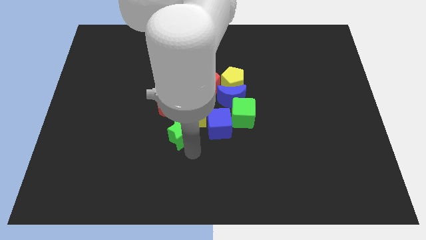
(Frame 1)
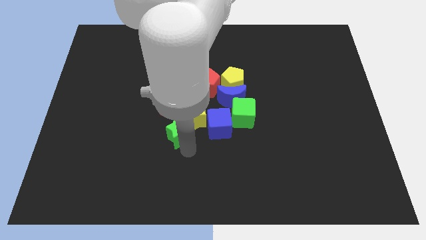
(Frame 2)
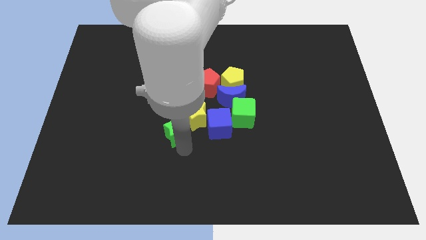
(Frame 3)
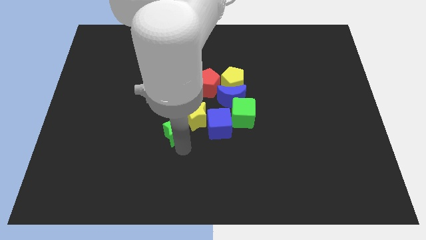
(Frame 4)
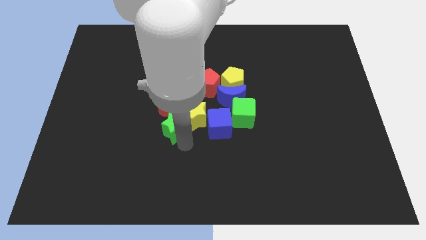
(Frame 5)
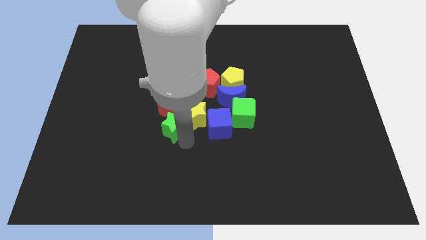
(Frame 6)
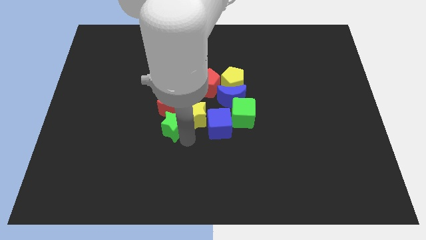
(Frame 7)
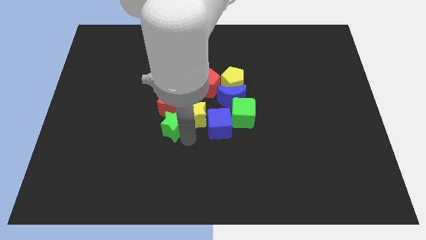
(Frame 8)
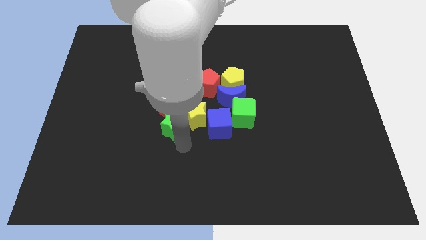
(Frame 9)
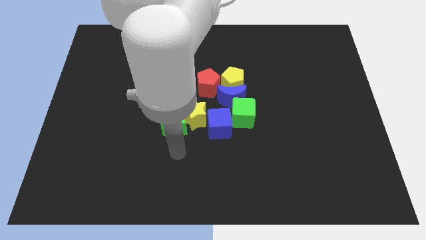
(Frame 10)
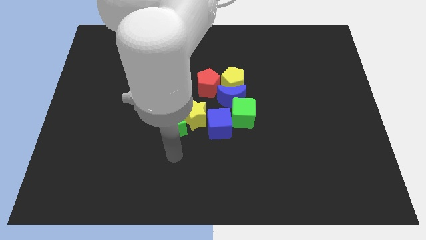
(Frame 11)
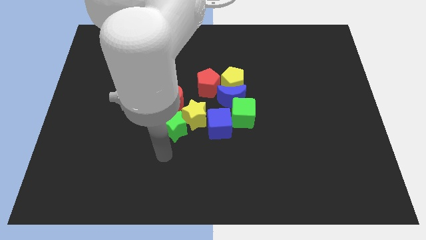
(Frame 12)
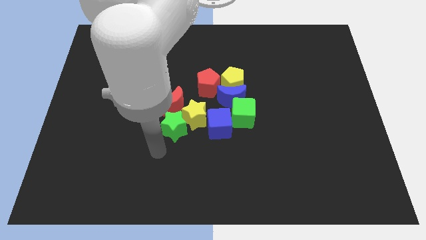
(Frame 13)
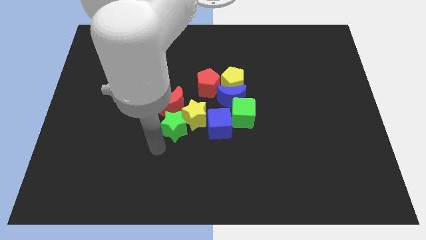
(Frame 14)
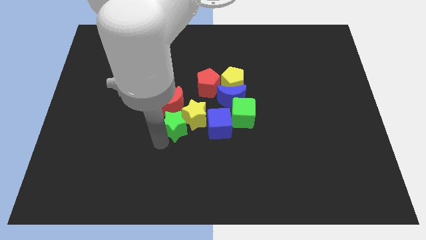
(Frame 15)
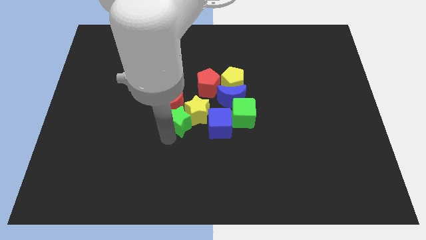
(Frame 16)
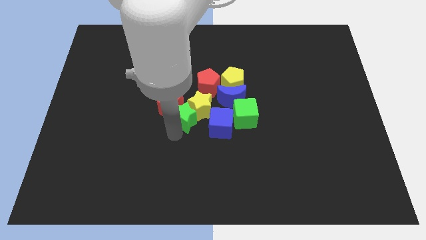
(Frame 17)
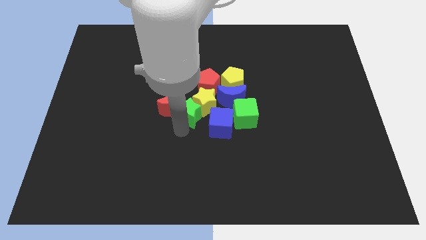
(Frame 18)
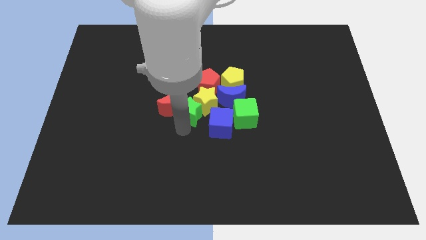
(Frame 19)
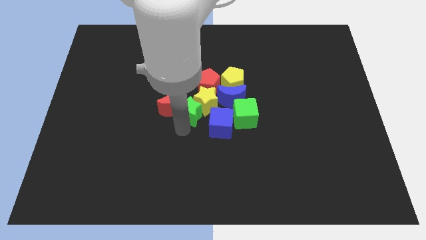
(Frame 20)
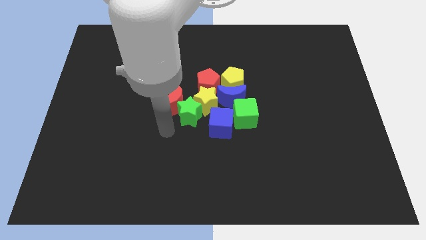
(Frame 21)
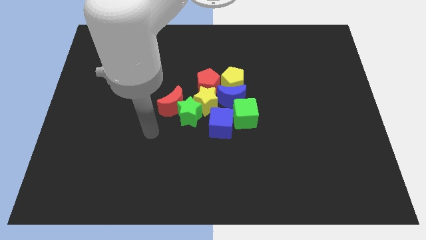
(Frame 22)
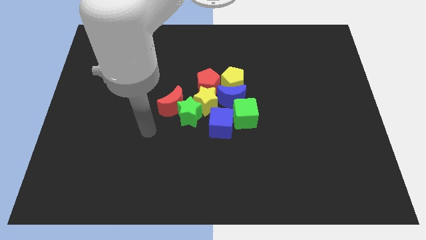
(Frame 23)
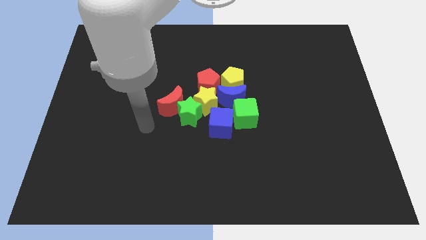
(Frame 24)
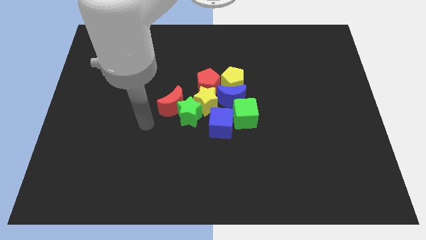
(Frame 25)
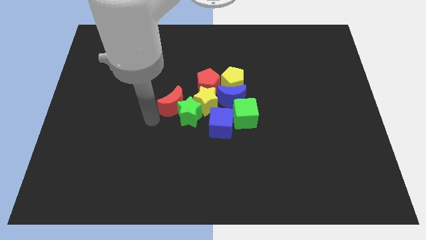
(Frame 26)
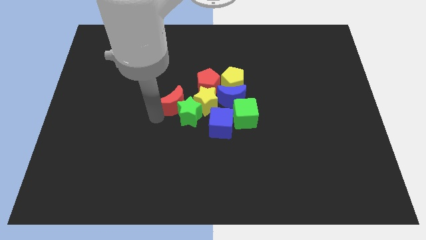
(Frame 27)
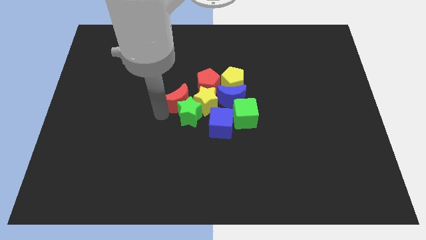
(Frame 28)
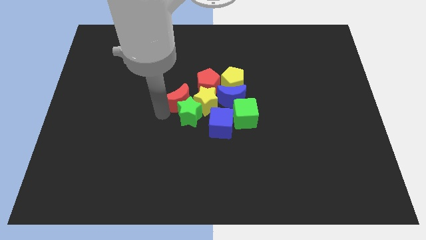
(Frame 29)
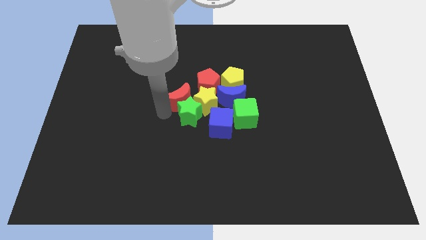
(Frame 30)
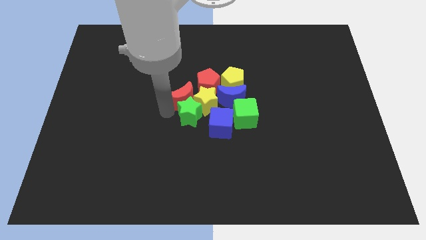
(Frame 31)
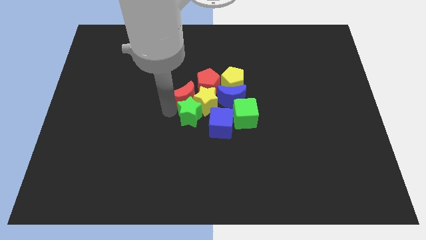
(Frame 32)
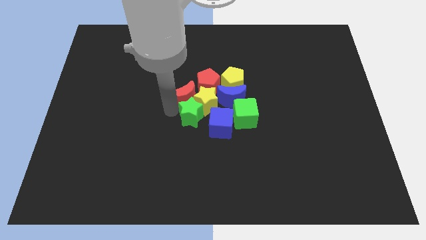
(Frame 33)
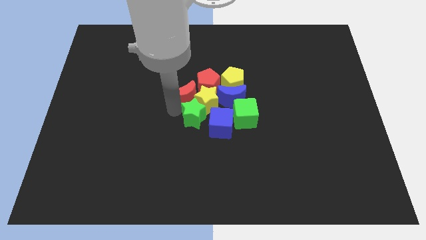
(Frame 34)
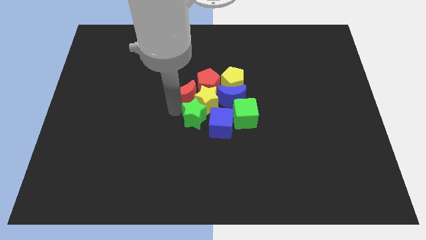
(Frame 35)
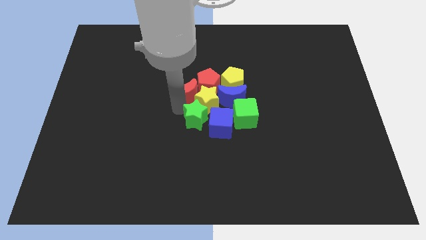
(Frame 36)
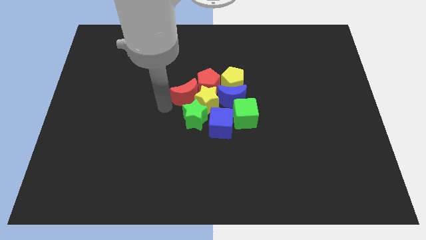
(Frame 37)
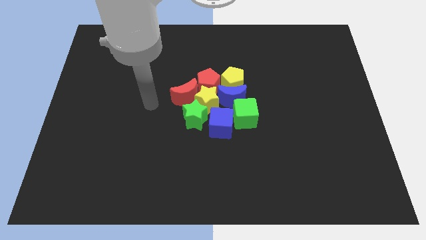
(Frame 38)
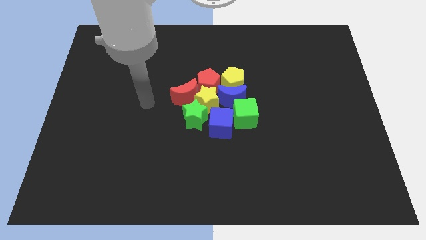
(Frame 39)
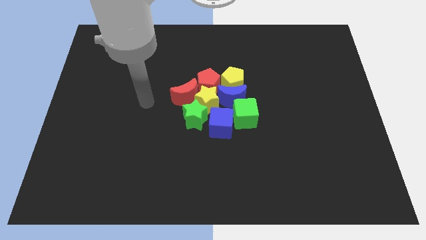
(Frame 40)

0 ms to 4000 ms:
move the green star yellow star and red moon into the bottom side of the red pentagon

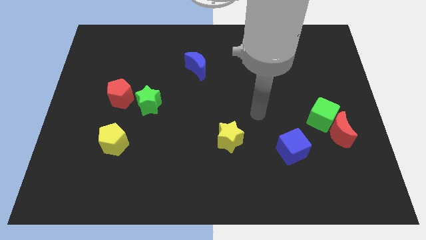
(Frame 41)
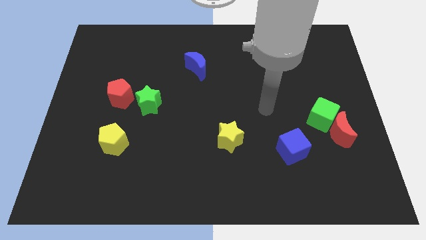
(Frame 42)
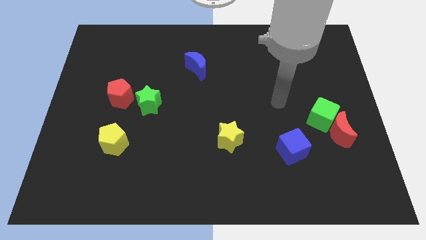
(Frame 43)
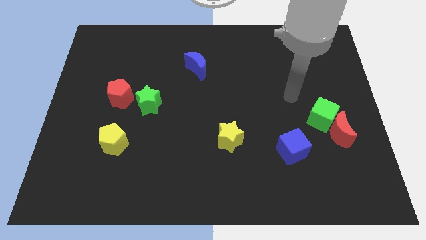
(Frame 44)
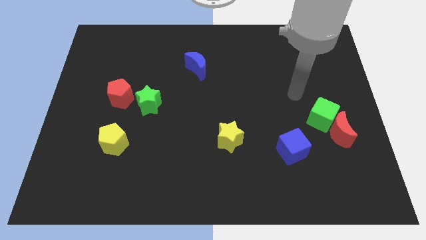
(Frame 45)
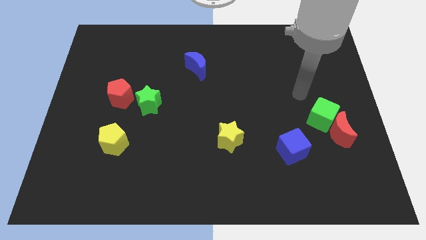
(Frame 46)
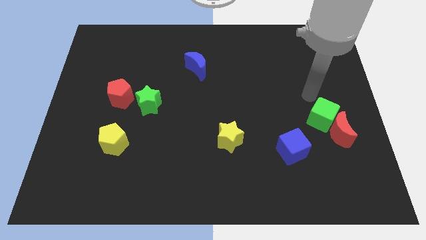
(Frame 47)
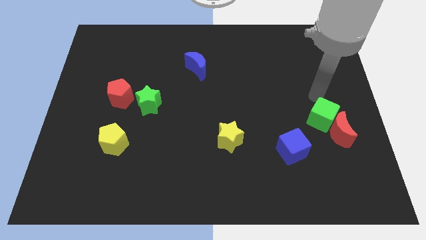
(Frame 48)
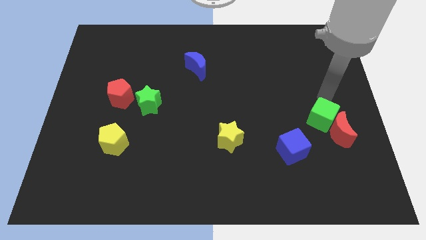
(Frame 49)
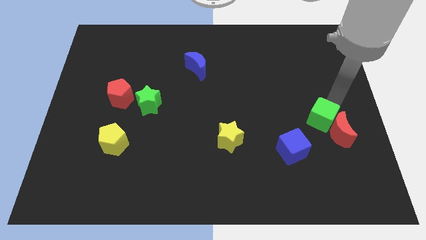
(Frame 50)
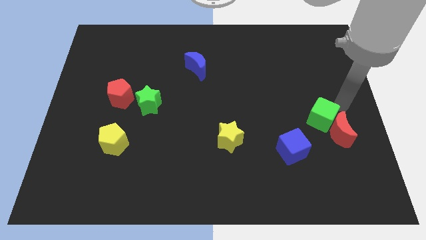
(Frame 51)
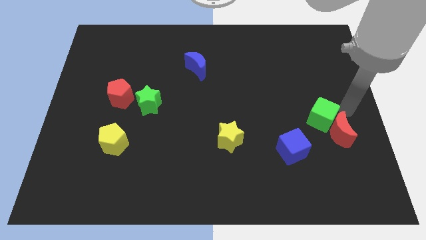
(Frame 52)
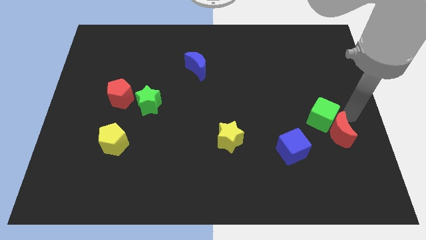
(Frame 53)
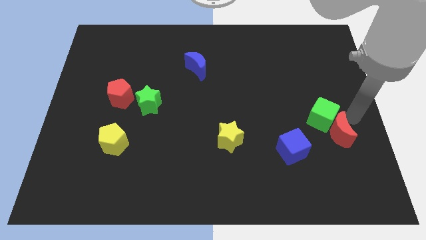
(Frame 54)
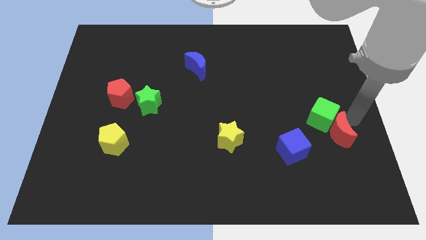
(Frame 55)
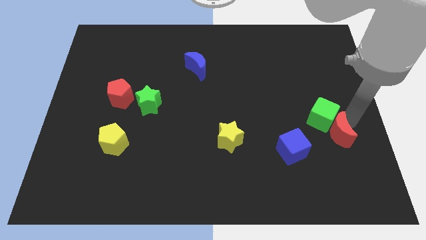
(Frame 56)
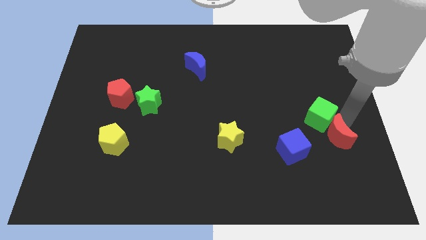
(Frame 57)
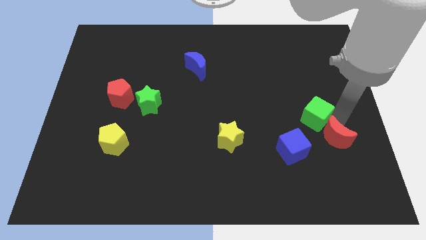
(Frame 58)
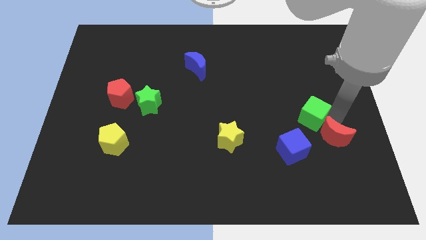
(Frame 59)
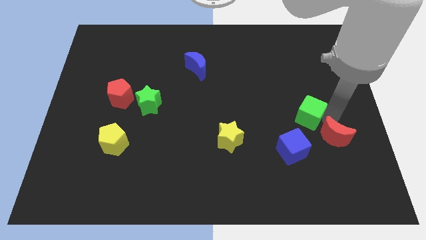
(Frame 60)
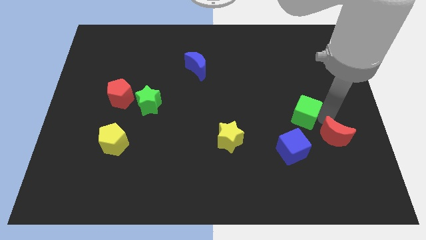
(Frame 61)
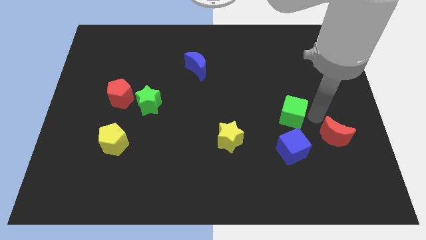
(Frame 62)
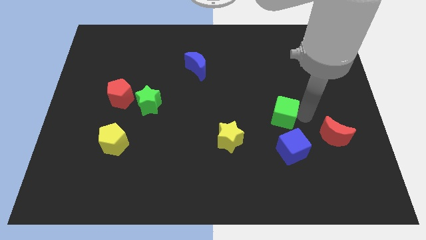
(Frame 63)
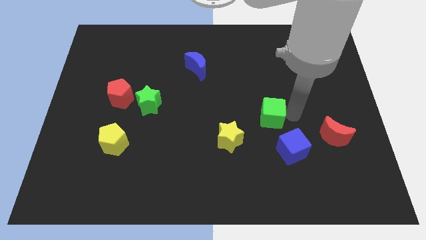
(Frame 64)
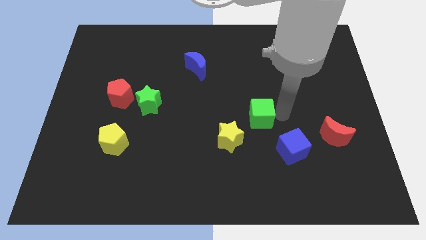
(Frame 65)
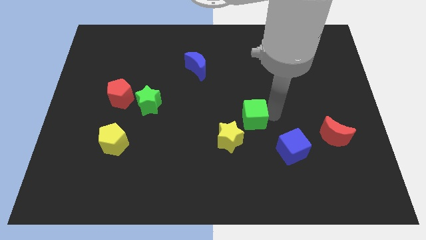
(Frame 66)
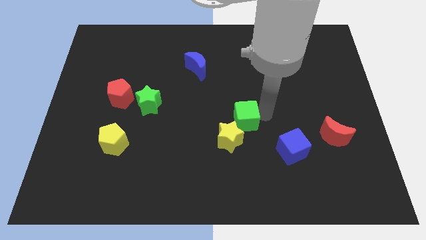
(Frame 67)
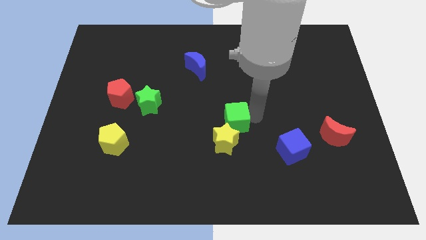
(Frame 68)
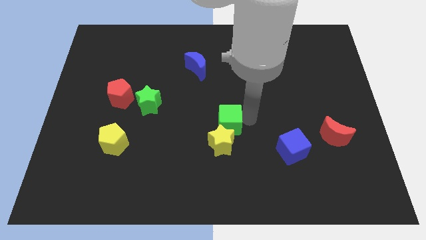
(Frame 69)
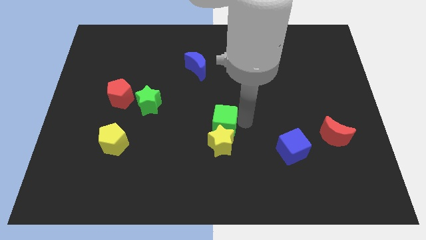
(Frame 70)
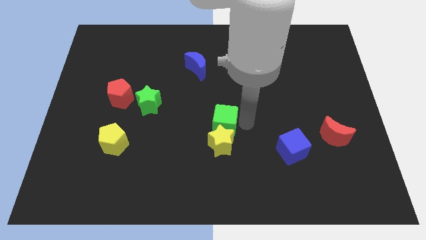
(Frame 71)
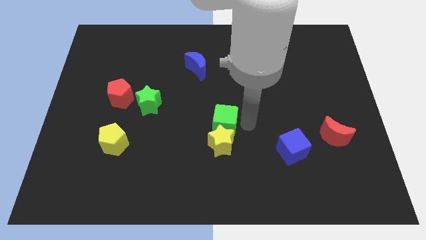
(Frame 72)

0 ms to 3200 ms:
move green cube into the yellow star

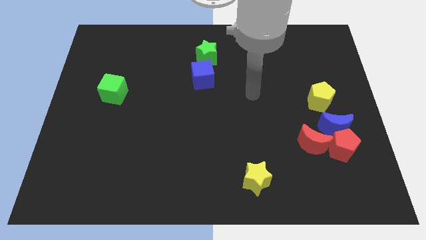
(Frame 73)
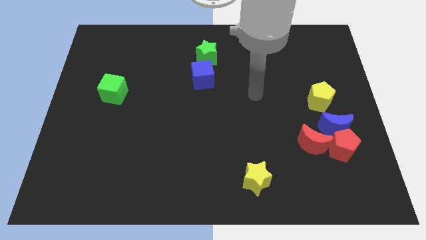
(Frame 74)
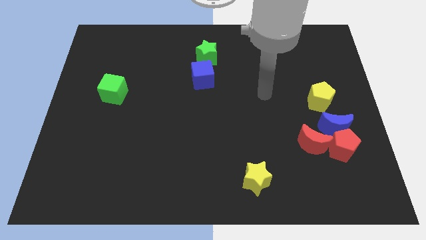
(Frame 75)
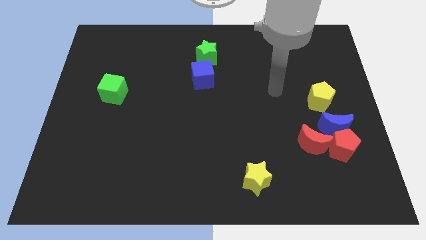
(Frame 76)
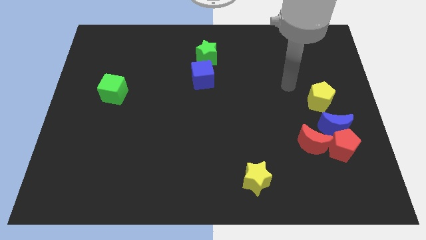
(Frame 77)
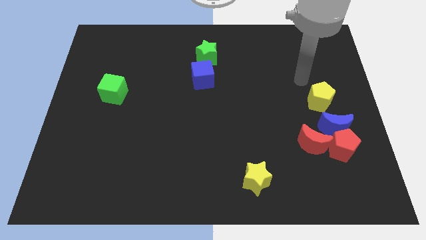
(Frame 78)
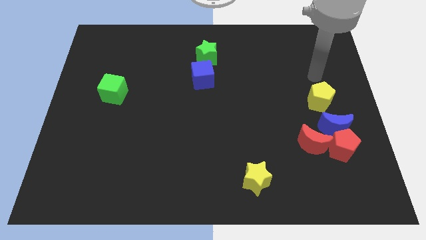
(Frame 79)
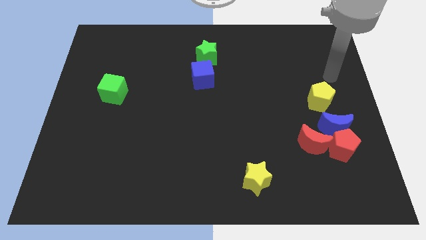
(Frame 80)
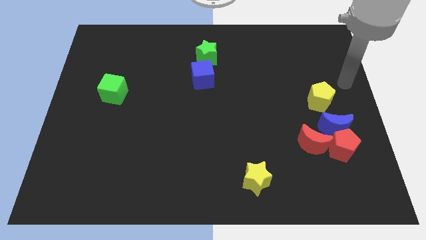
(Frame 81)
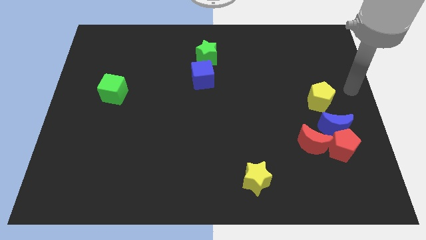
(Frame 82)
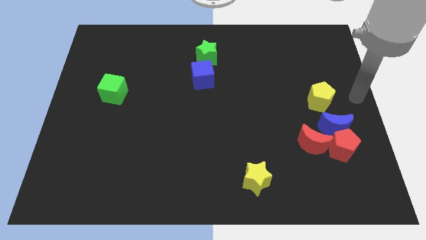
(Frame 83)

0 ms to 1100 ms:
move your hand to the right side of the yellow pentagon

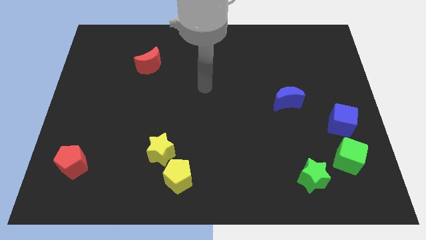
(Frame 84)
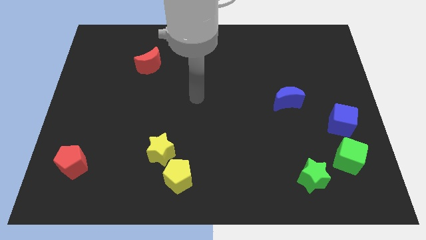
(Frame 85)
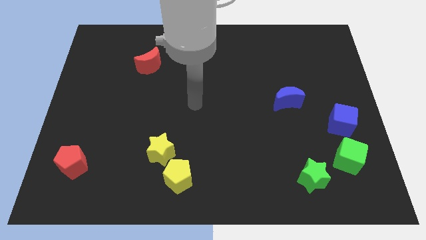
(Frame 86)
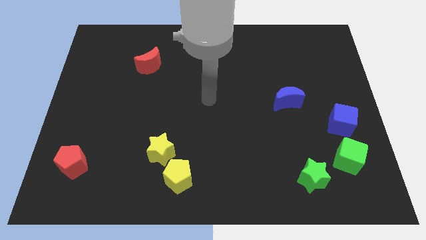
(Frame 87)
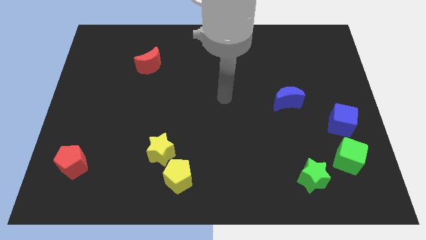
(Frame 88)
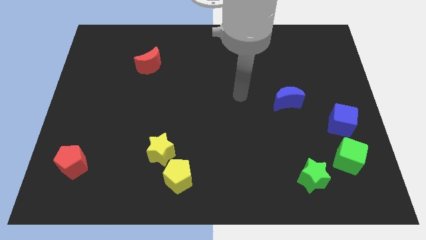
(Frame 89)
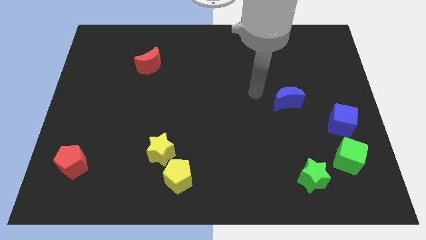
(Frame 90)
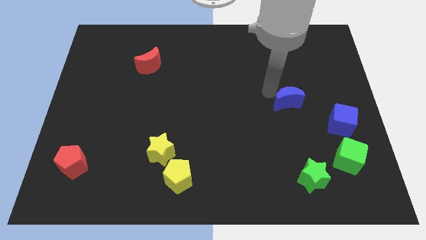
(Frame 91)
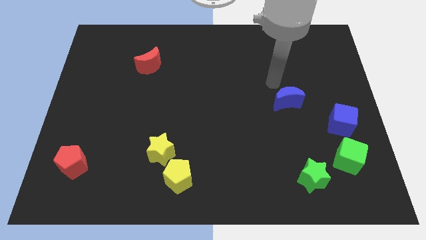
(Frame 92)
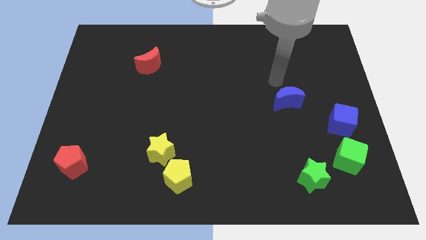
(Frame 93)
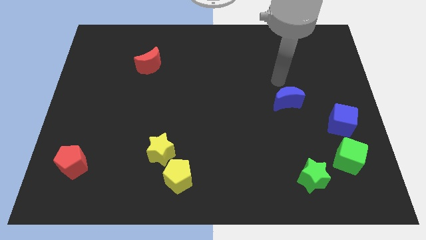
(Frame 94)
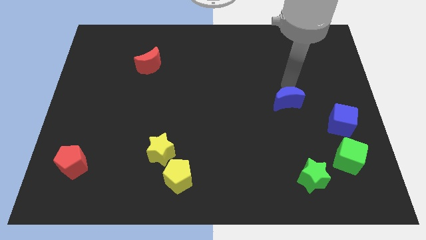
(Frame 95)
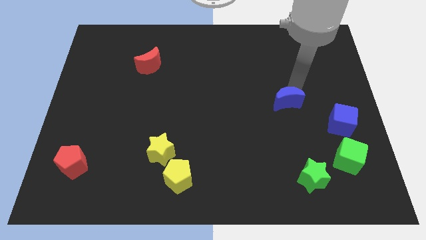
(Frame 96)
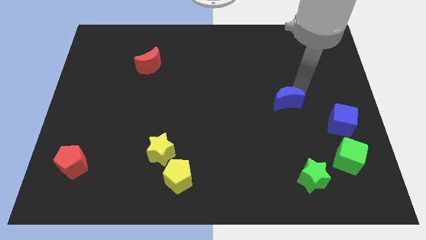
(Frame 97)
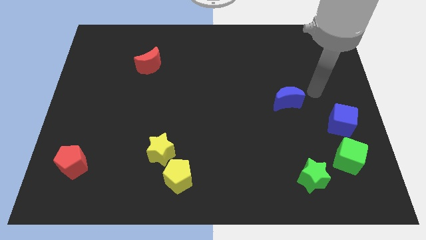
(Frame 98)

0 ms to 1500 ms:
point your arm at the top right of the blue crescent
